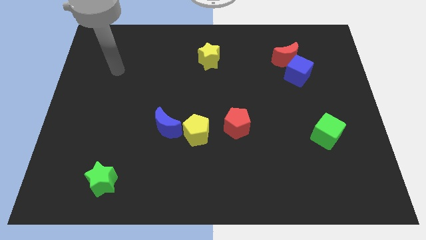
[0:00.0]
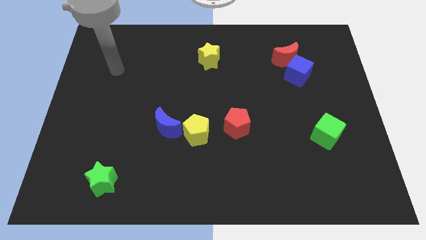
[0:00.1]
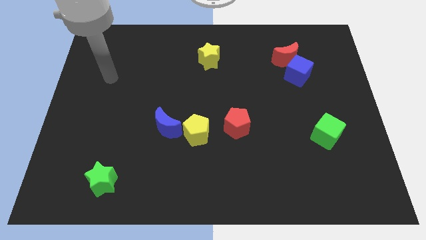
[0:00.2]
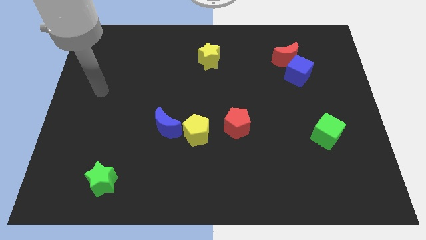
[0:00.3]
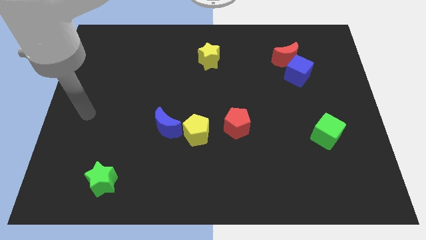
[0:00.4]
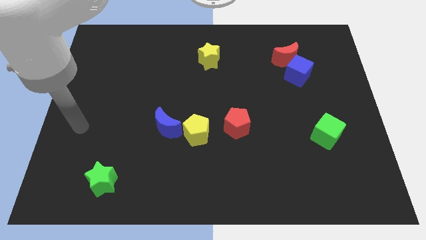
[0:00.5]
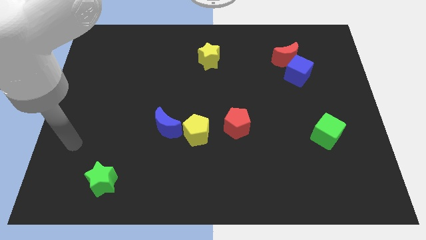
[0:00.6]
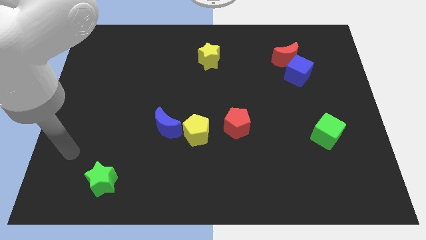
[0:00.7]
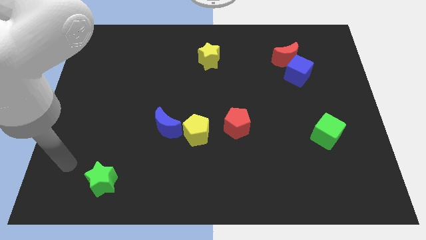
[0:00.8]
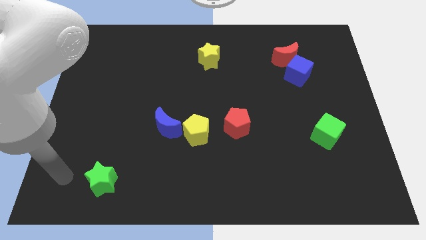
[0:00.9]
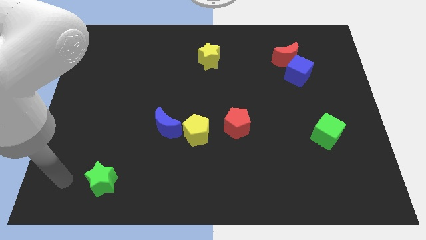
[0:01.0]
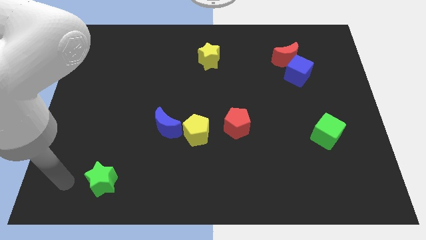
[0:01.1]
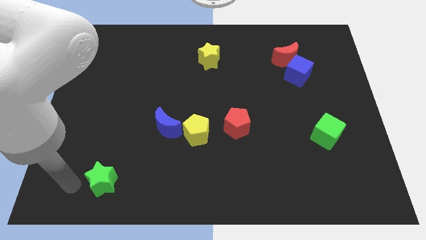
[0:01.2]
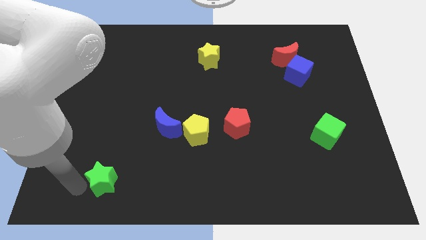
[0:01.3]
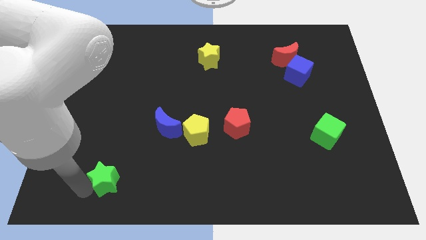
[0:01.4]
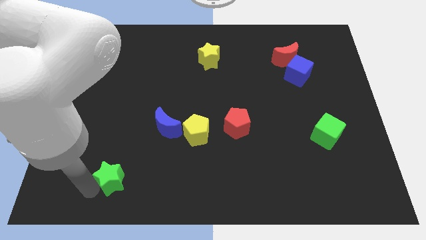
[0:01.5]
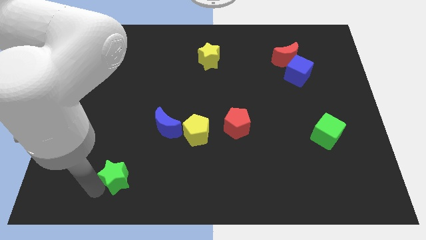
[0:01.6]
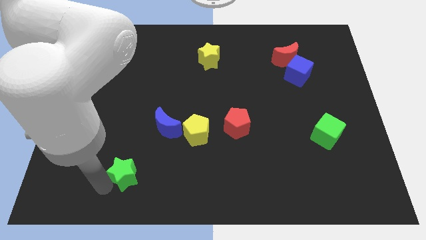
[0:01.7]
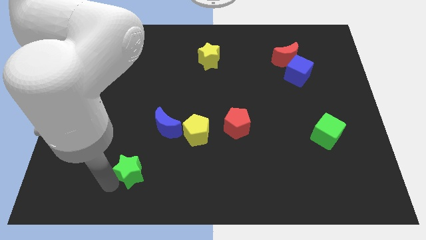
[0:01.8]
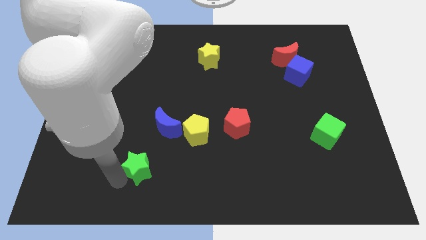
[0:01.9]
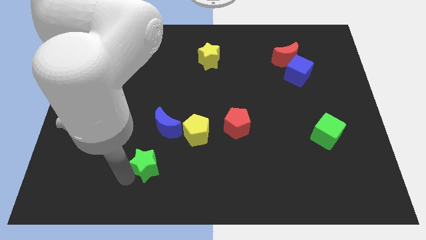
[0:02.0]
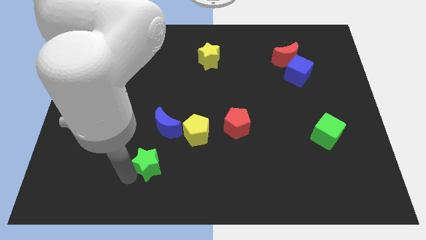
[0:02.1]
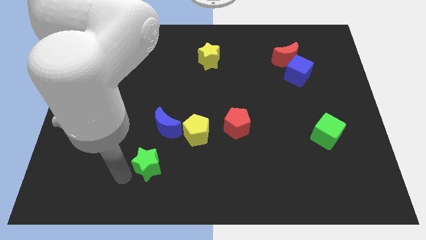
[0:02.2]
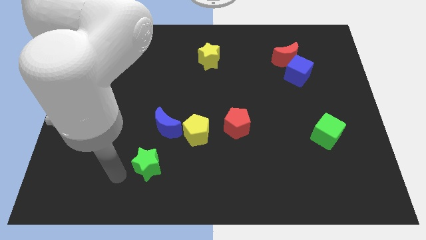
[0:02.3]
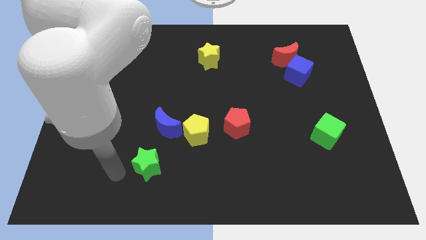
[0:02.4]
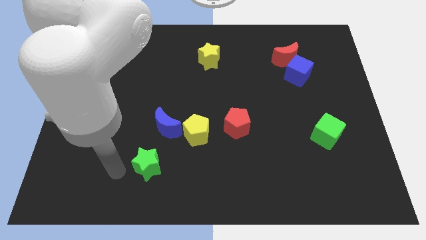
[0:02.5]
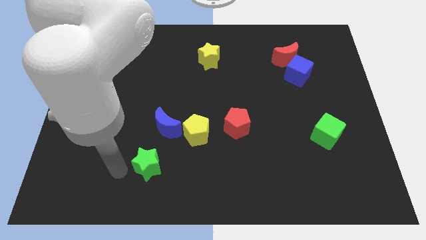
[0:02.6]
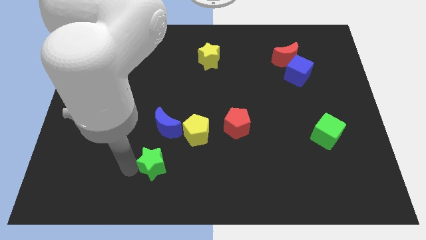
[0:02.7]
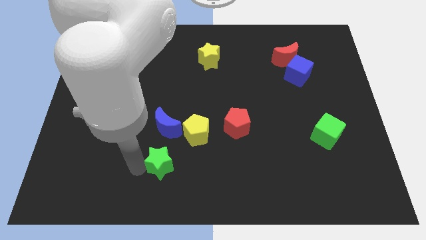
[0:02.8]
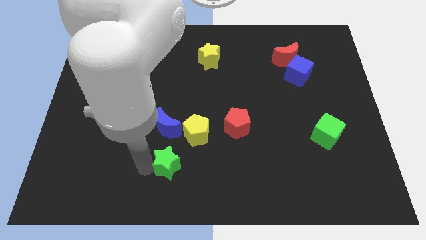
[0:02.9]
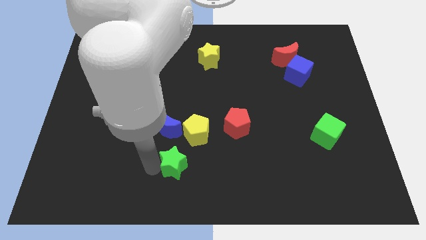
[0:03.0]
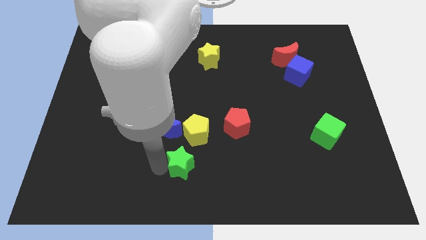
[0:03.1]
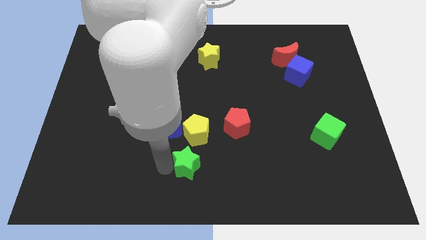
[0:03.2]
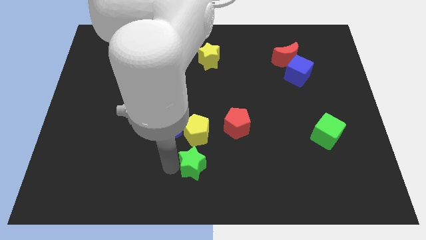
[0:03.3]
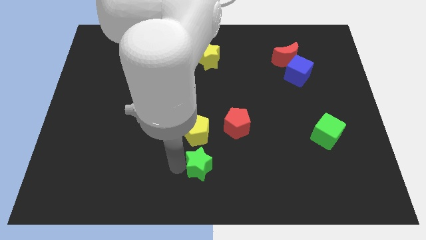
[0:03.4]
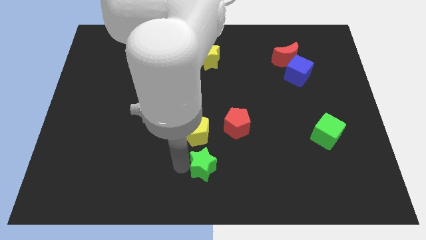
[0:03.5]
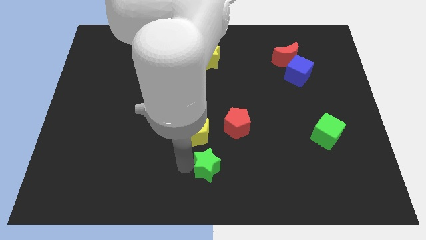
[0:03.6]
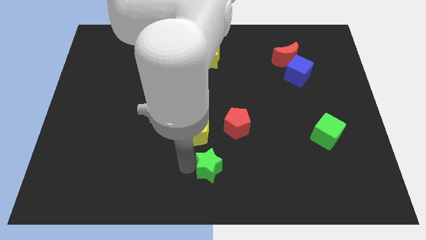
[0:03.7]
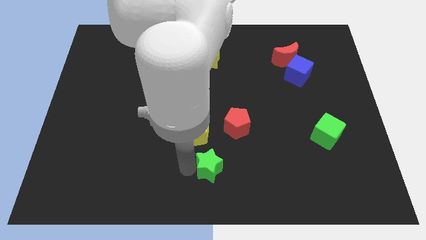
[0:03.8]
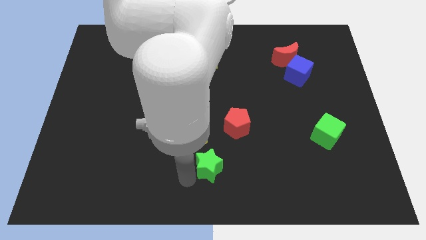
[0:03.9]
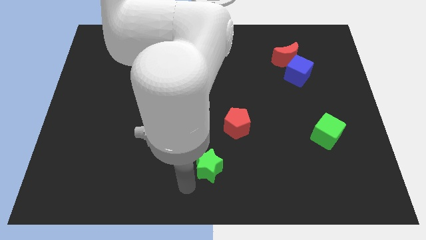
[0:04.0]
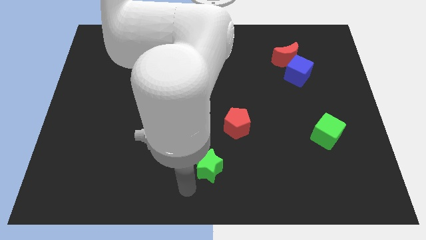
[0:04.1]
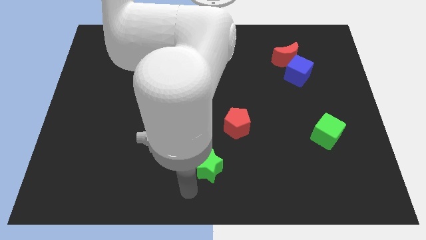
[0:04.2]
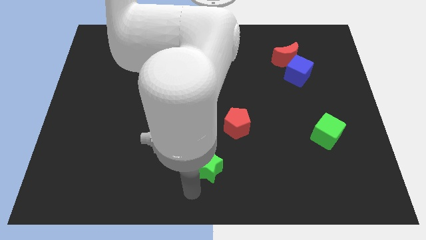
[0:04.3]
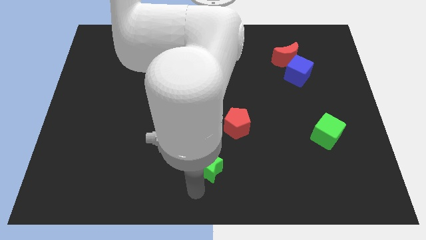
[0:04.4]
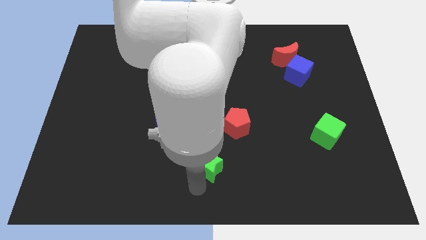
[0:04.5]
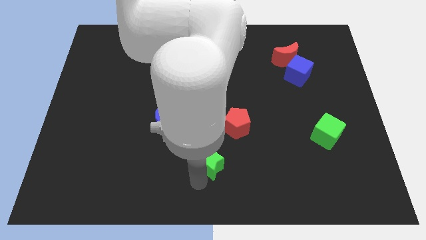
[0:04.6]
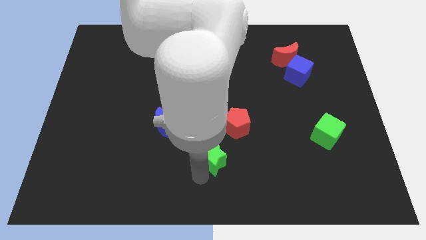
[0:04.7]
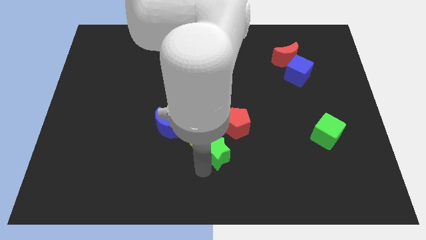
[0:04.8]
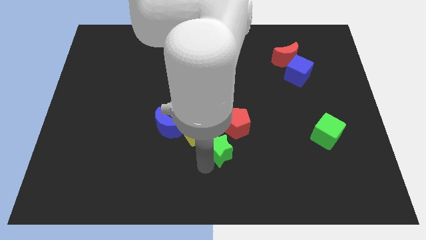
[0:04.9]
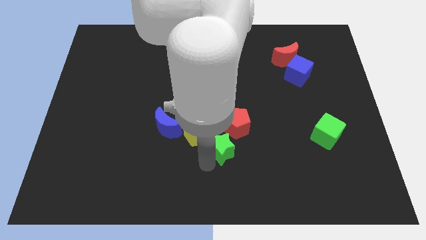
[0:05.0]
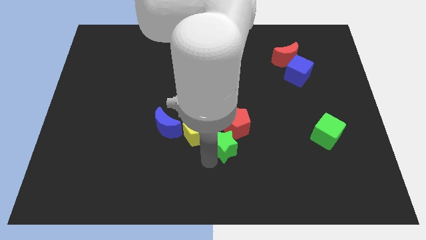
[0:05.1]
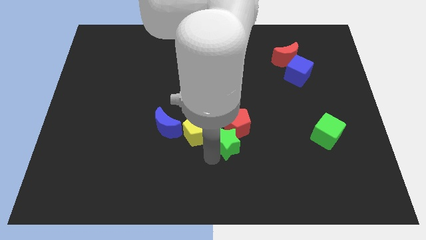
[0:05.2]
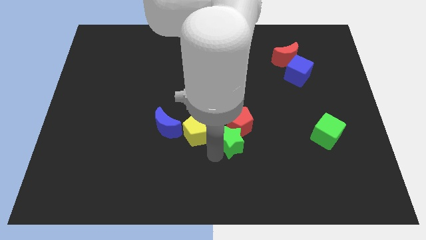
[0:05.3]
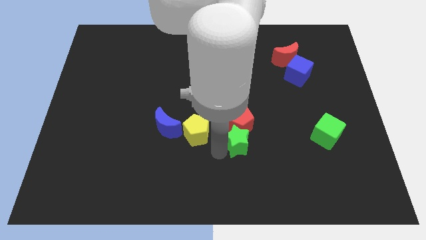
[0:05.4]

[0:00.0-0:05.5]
slide the green star to the red pentagon

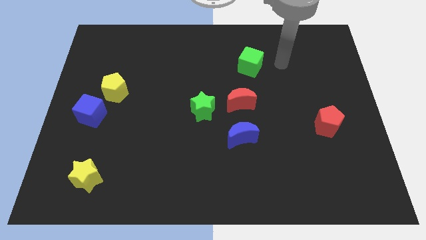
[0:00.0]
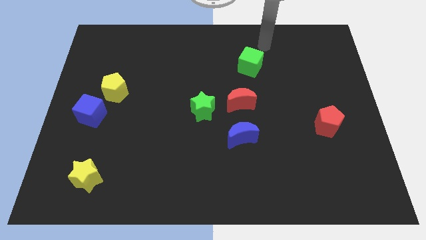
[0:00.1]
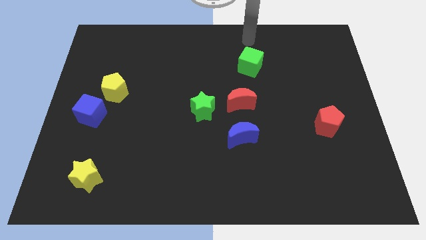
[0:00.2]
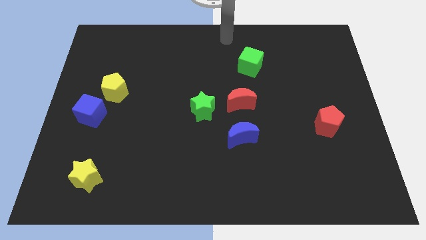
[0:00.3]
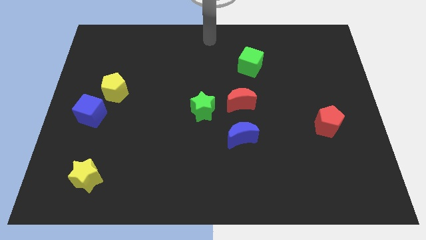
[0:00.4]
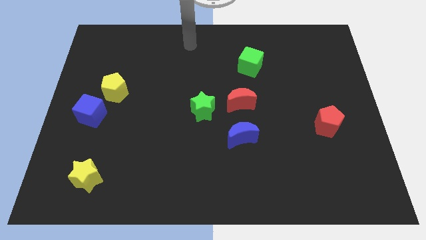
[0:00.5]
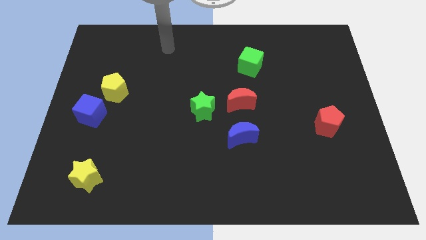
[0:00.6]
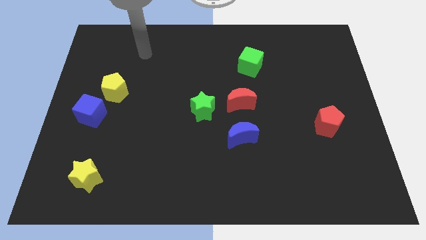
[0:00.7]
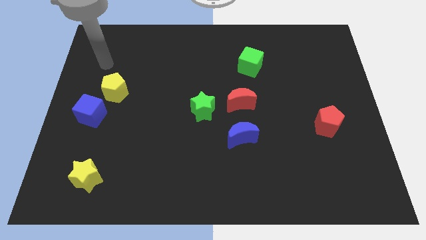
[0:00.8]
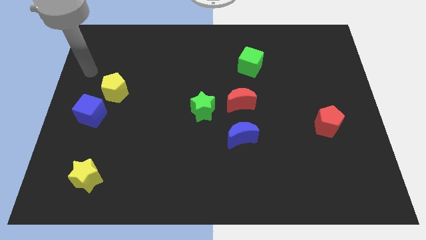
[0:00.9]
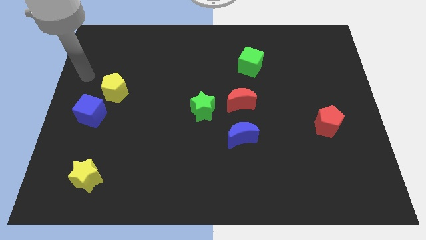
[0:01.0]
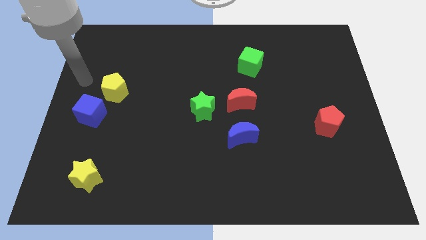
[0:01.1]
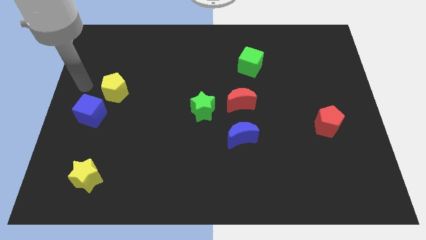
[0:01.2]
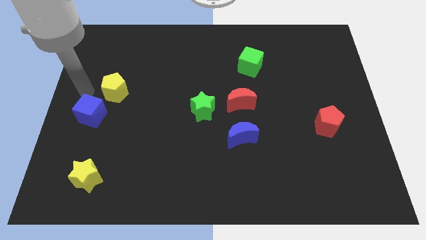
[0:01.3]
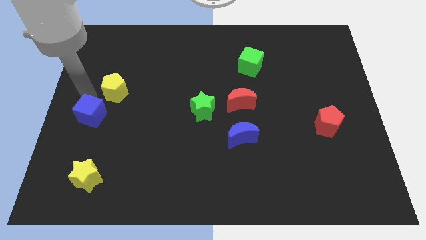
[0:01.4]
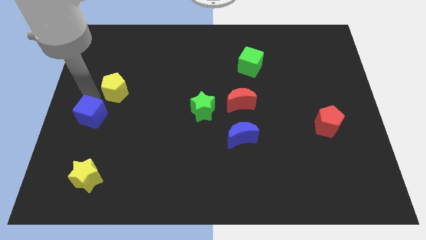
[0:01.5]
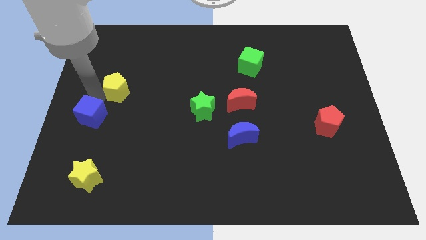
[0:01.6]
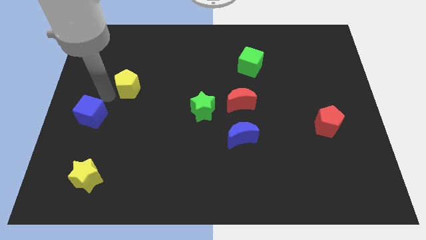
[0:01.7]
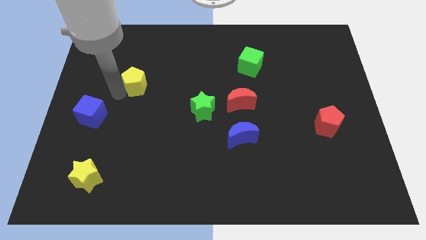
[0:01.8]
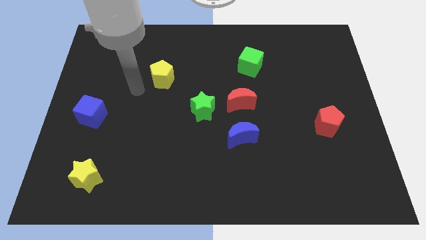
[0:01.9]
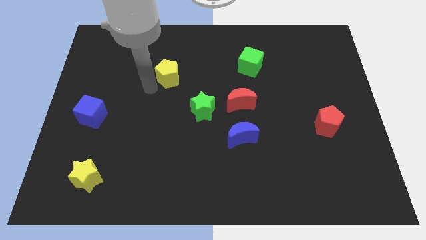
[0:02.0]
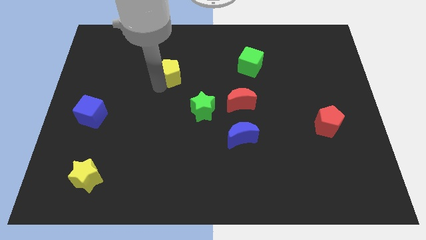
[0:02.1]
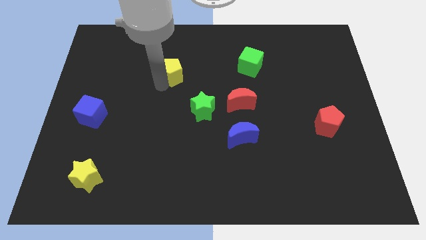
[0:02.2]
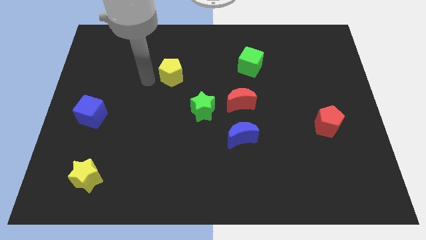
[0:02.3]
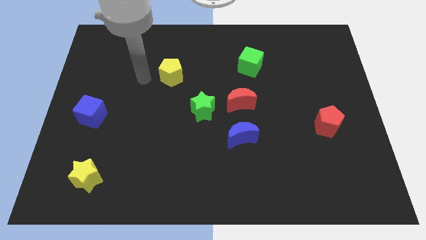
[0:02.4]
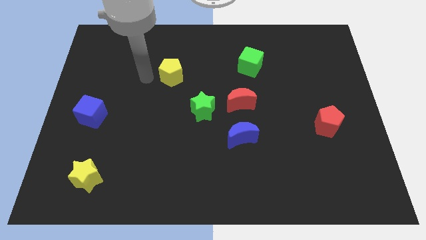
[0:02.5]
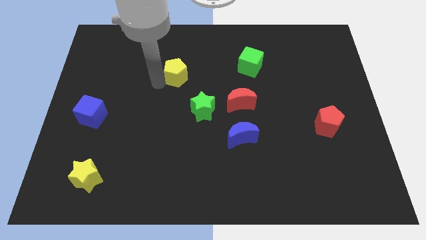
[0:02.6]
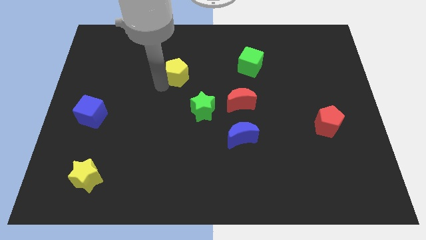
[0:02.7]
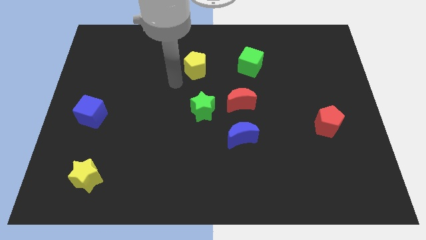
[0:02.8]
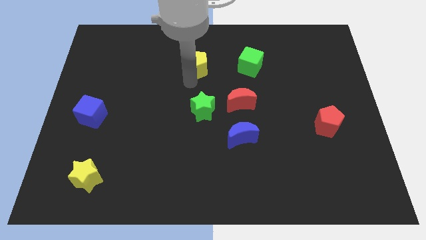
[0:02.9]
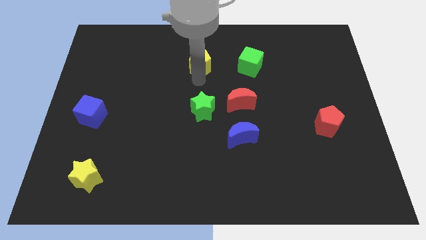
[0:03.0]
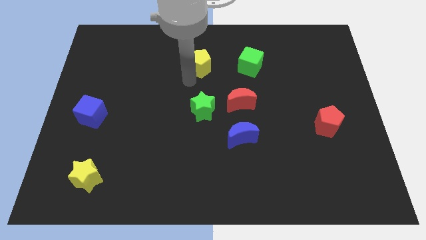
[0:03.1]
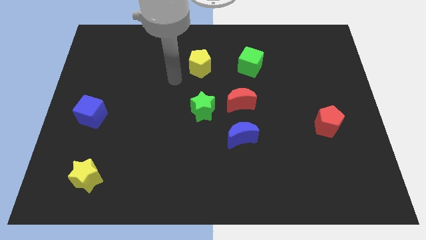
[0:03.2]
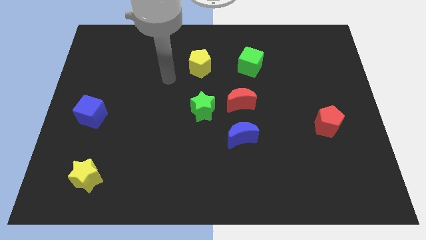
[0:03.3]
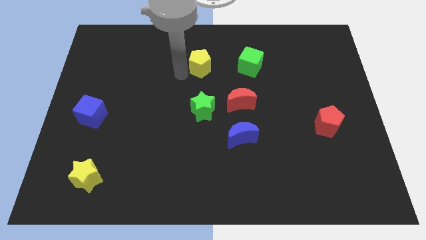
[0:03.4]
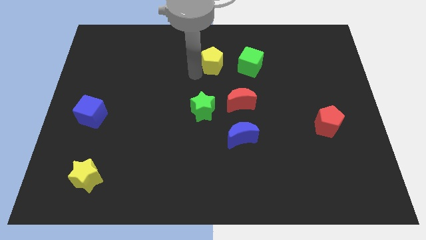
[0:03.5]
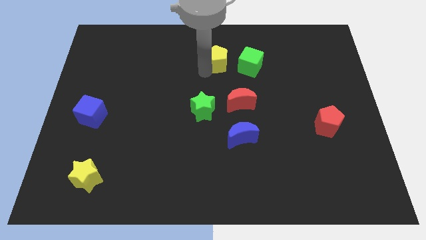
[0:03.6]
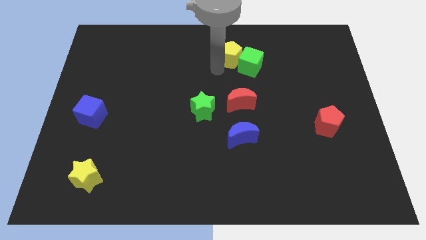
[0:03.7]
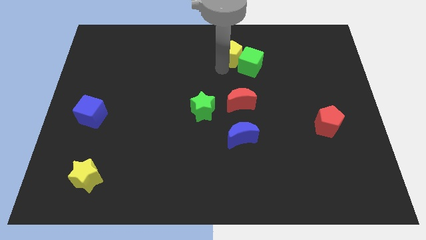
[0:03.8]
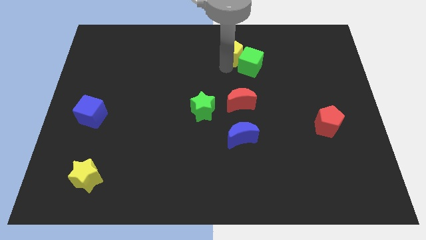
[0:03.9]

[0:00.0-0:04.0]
slide the yellow pentagon towards the green cube
